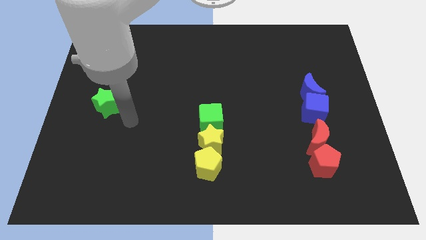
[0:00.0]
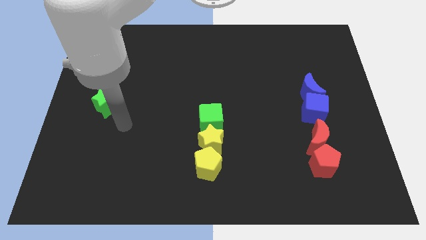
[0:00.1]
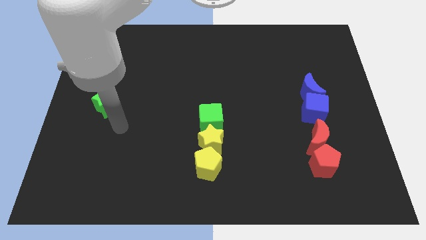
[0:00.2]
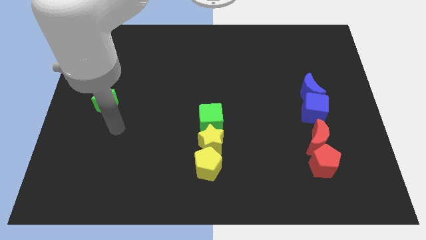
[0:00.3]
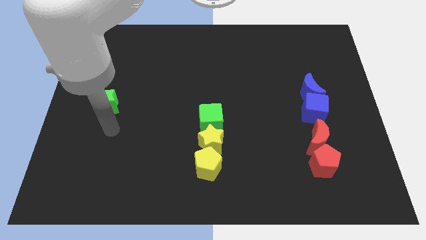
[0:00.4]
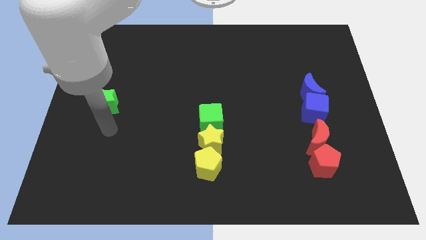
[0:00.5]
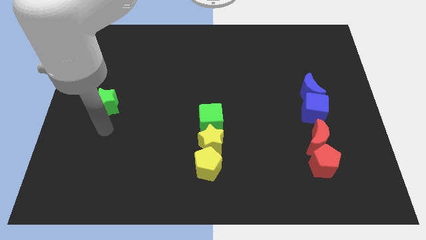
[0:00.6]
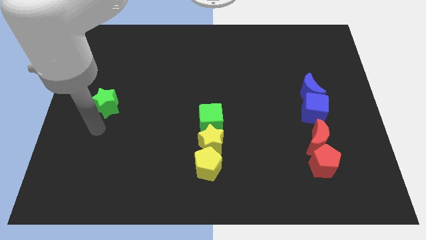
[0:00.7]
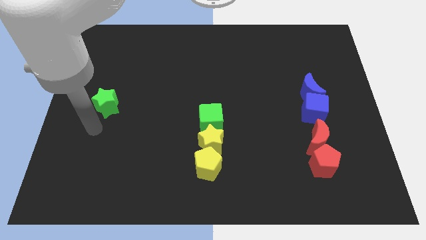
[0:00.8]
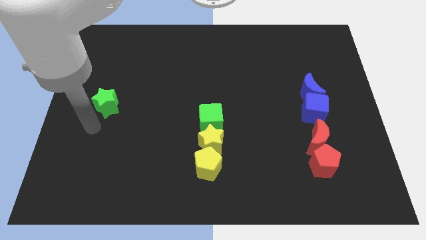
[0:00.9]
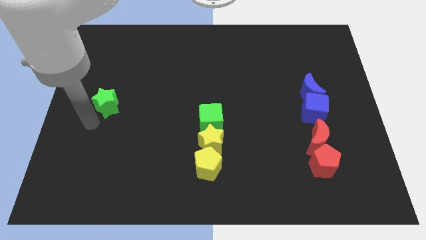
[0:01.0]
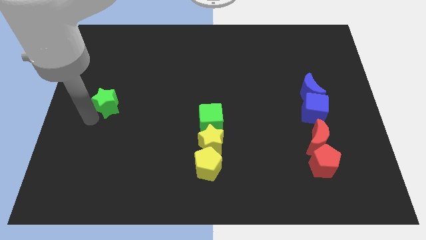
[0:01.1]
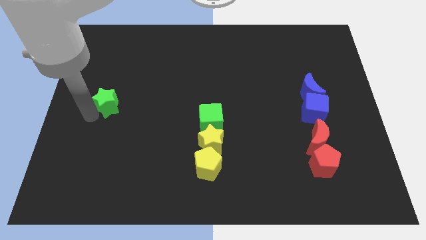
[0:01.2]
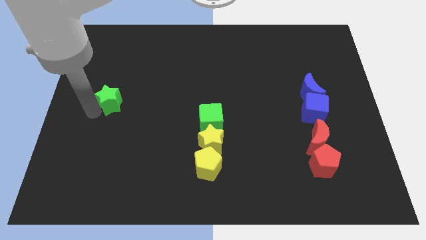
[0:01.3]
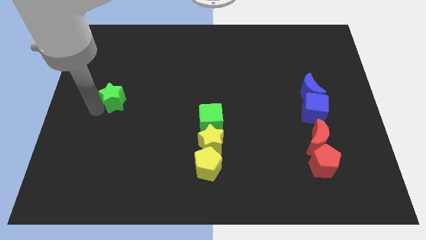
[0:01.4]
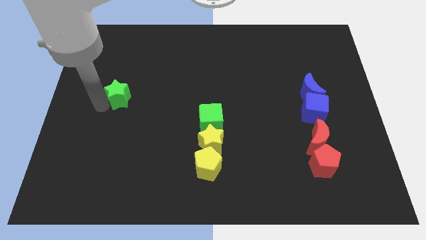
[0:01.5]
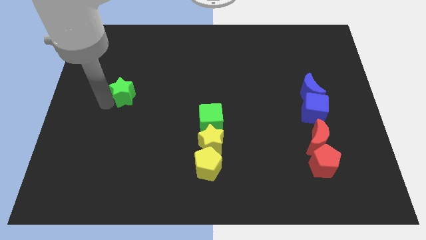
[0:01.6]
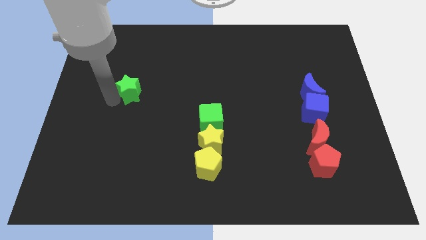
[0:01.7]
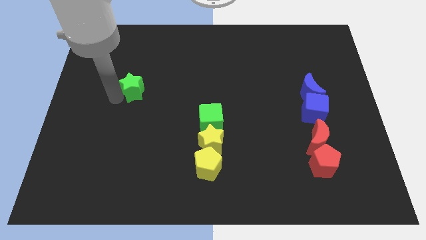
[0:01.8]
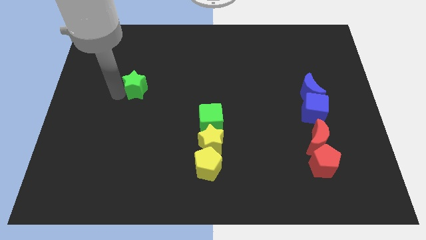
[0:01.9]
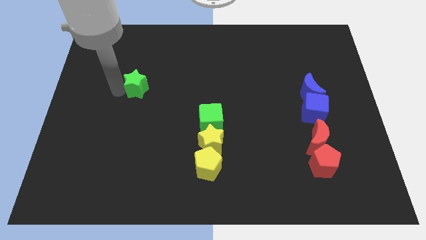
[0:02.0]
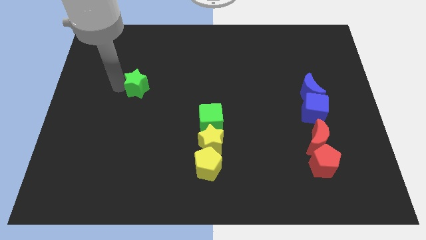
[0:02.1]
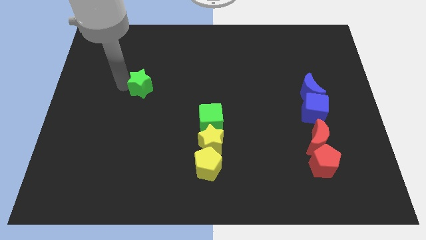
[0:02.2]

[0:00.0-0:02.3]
slightly push the green star towards upside

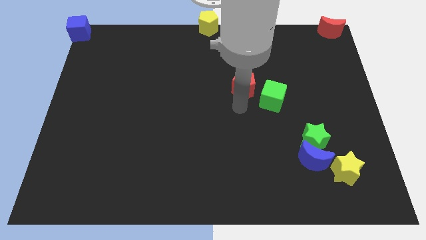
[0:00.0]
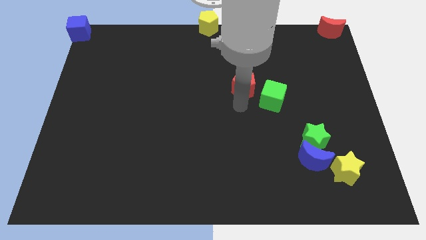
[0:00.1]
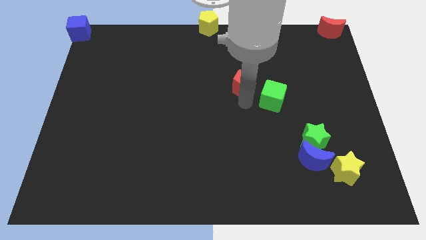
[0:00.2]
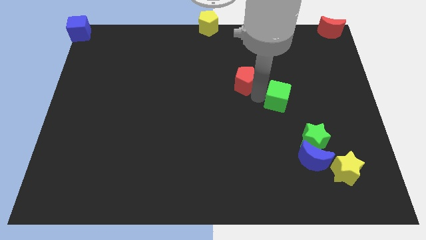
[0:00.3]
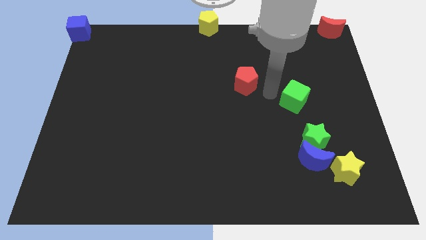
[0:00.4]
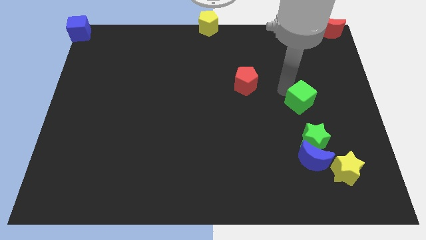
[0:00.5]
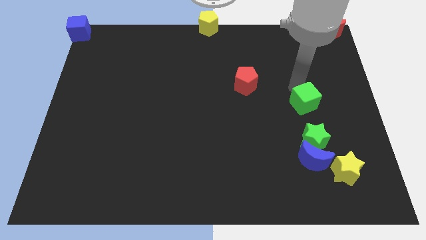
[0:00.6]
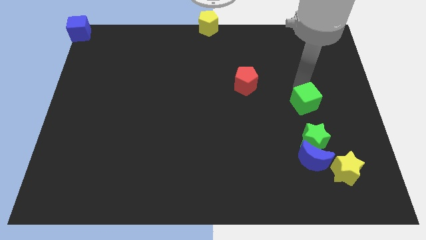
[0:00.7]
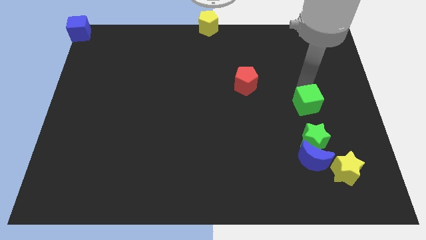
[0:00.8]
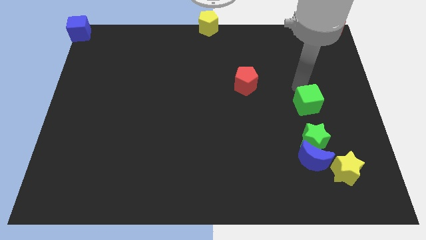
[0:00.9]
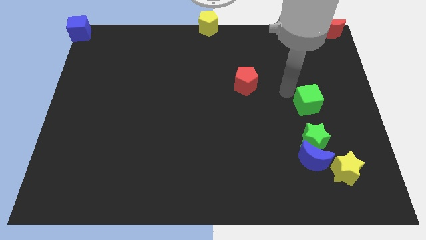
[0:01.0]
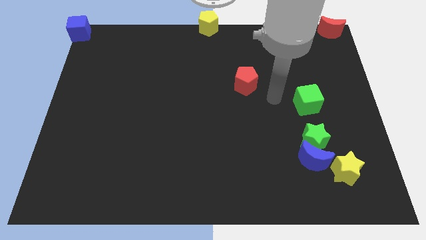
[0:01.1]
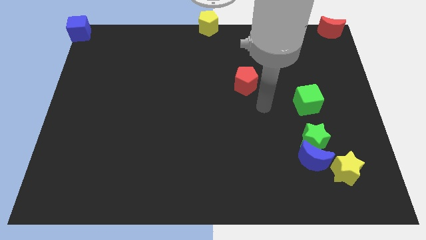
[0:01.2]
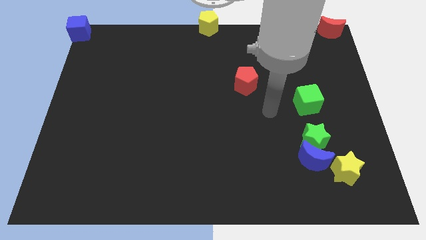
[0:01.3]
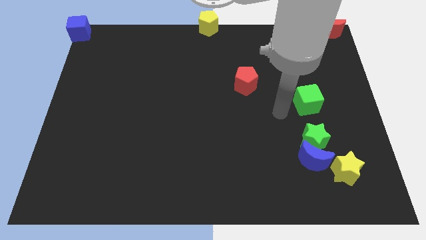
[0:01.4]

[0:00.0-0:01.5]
separate the red pentagon and green cube

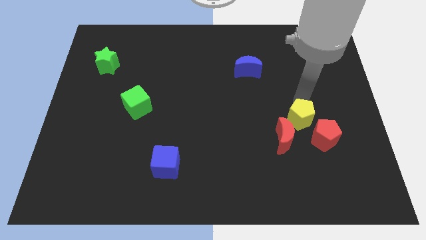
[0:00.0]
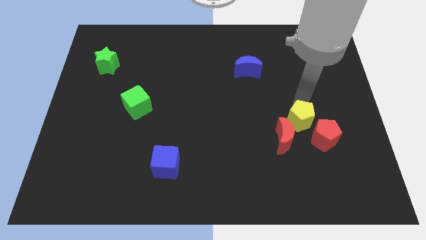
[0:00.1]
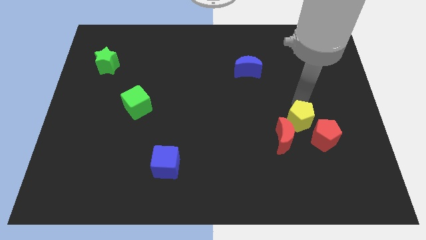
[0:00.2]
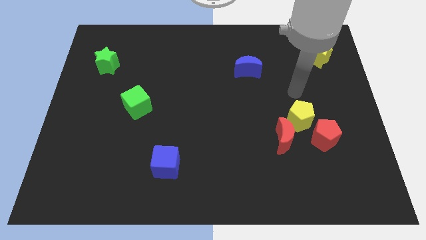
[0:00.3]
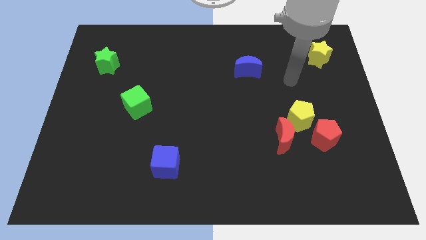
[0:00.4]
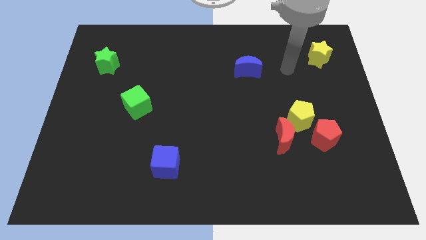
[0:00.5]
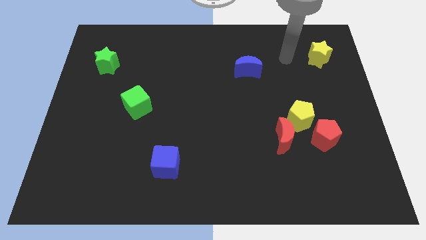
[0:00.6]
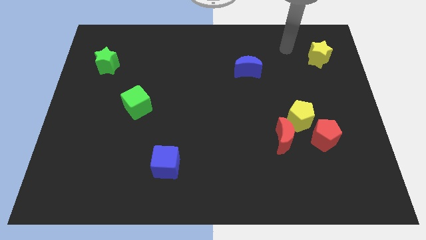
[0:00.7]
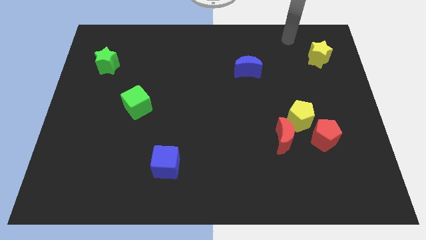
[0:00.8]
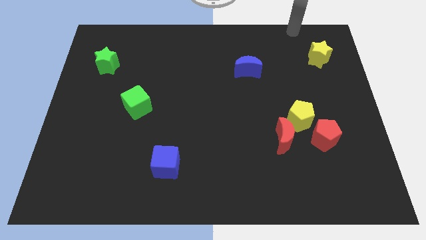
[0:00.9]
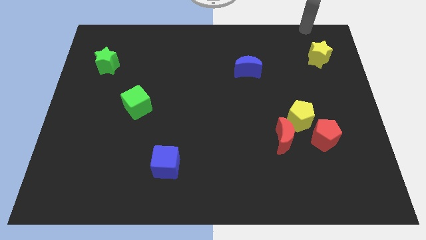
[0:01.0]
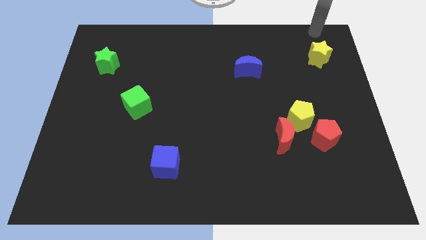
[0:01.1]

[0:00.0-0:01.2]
drag your arm away from the yellow pentagon

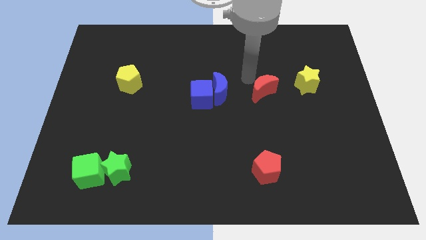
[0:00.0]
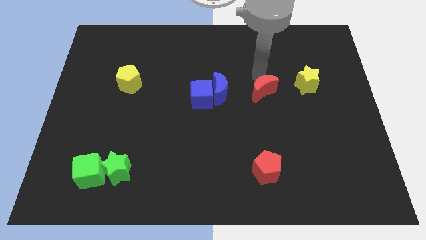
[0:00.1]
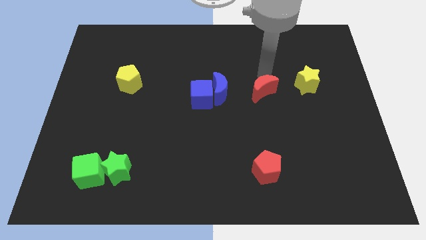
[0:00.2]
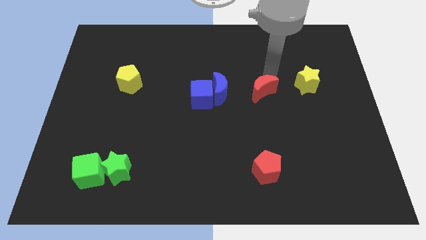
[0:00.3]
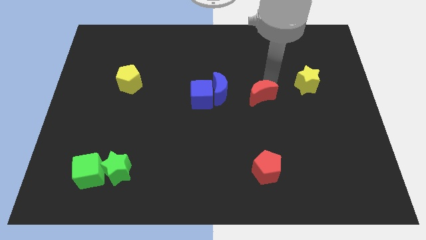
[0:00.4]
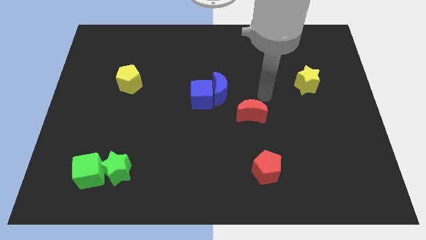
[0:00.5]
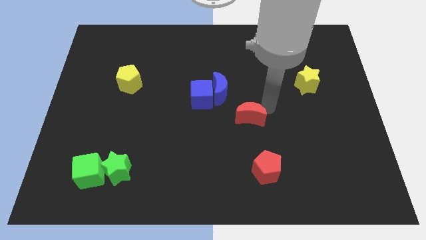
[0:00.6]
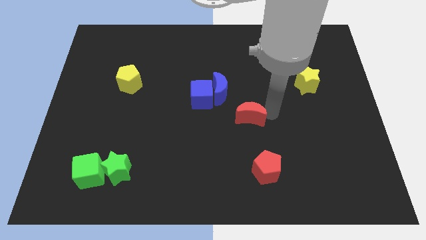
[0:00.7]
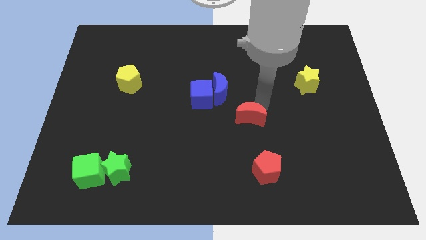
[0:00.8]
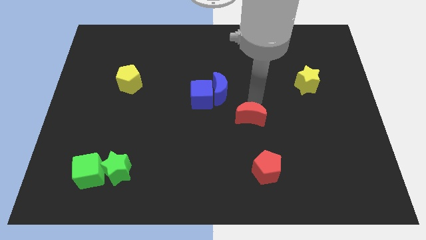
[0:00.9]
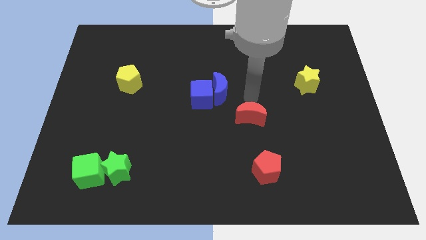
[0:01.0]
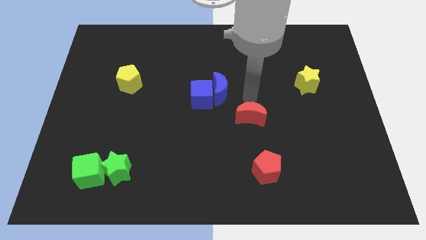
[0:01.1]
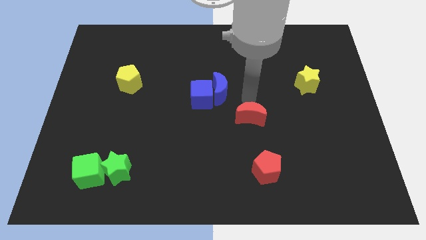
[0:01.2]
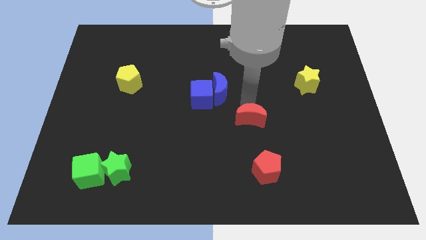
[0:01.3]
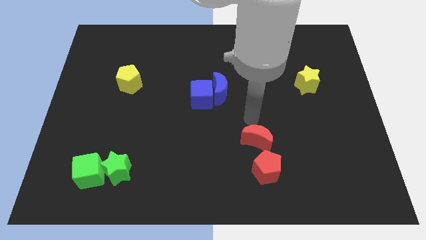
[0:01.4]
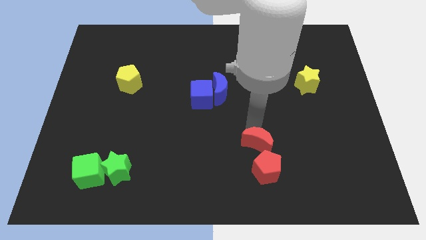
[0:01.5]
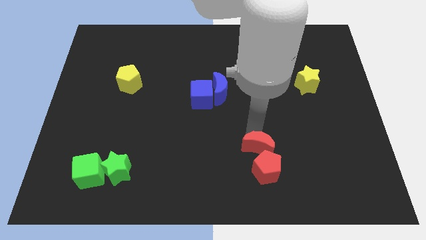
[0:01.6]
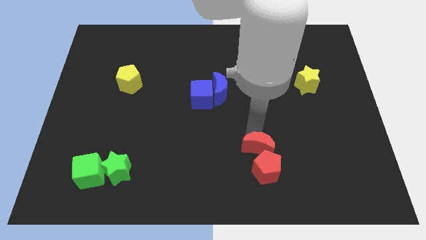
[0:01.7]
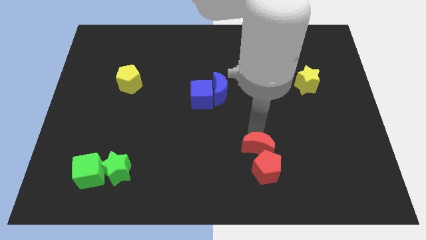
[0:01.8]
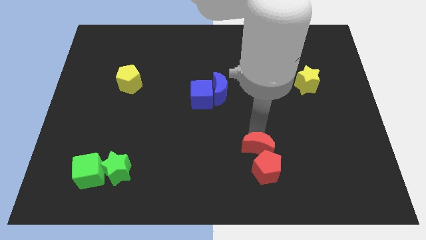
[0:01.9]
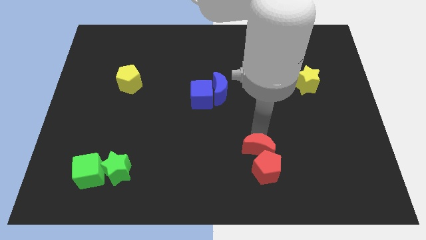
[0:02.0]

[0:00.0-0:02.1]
push the red crescent to the top of the red pentagon

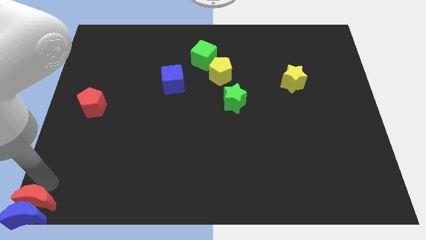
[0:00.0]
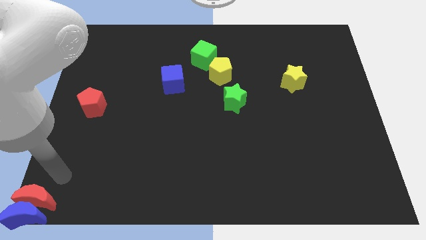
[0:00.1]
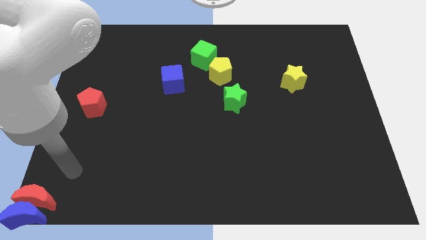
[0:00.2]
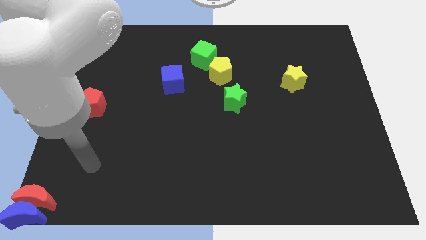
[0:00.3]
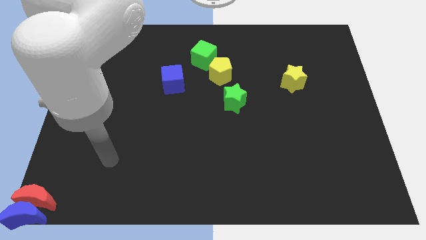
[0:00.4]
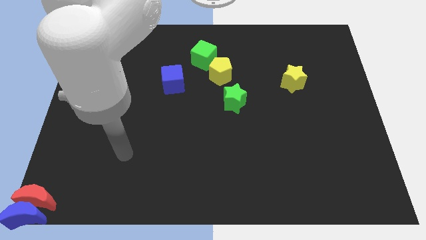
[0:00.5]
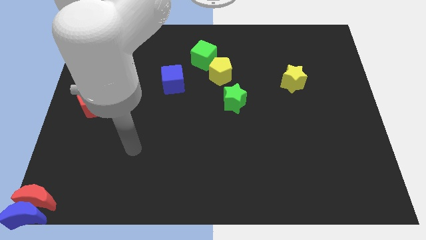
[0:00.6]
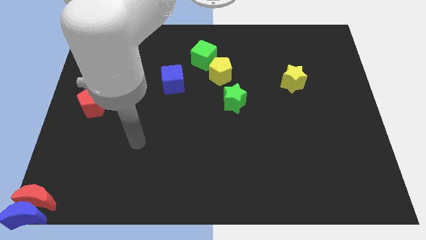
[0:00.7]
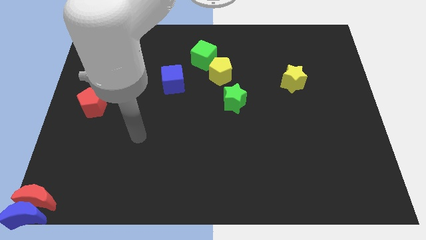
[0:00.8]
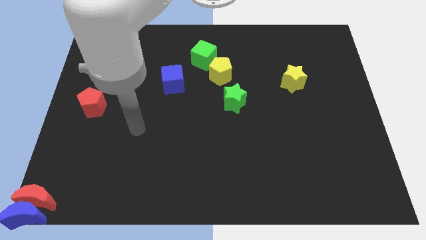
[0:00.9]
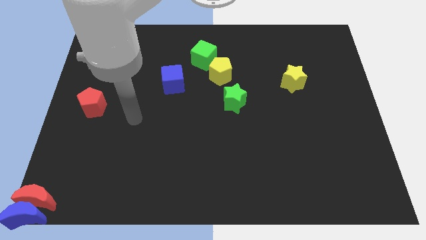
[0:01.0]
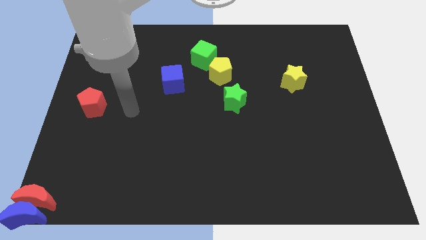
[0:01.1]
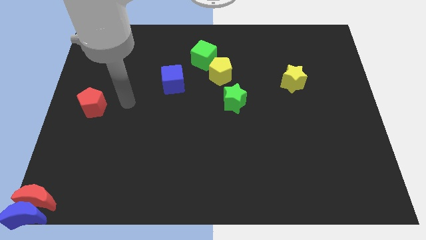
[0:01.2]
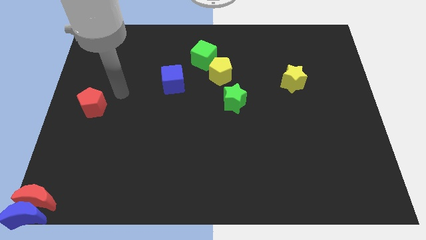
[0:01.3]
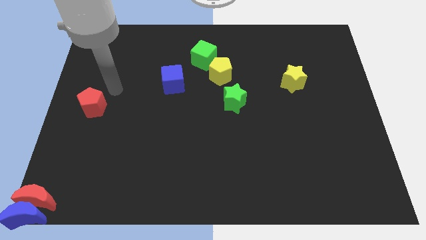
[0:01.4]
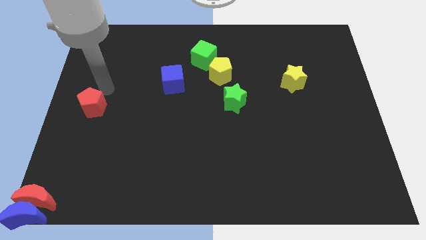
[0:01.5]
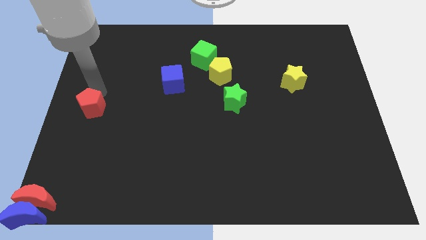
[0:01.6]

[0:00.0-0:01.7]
move your hand towards the top of the red pentagon

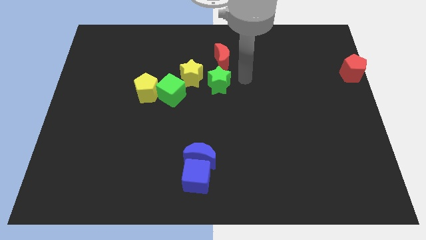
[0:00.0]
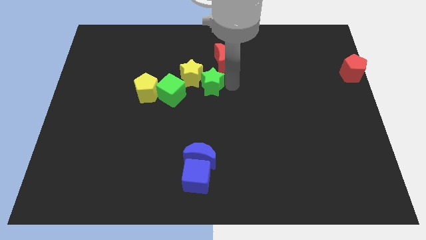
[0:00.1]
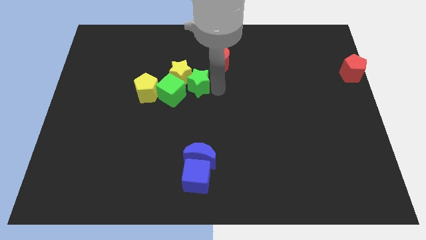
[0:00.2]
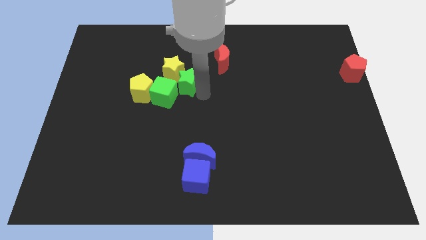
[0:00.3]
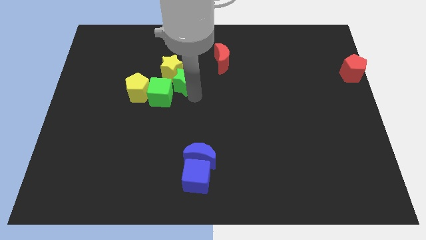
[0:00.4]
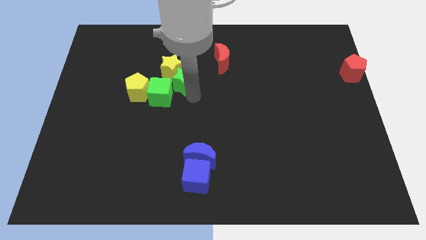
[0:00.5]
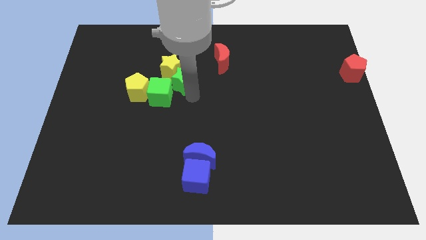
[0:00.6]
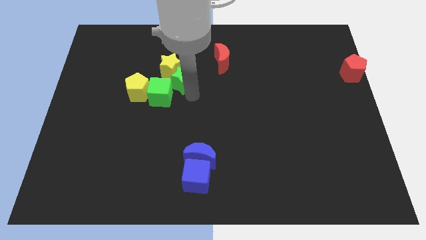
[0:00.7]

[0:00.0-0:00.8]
push the green square slightly towards the left
